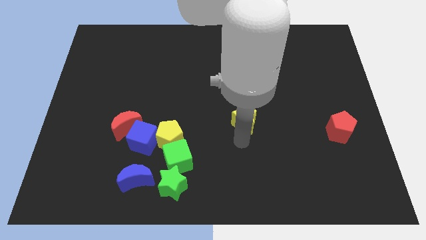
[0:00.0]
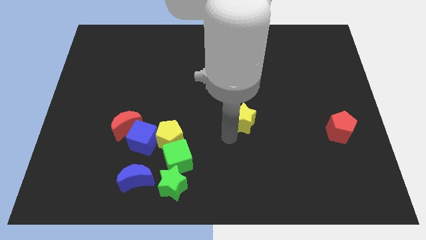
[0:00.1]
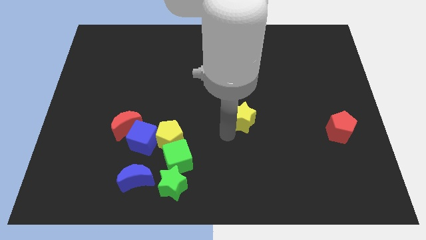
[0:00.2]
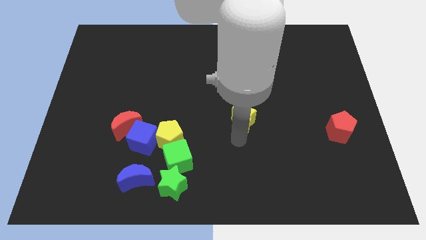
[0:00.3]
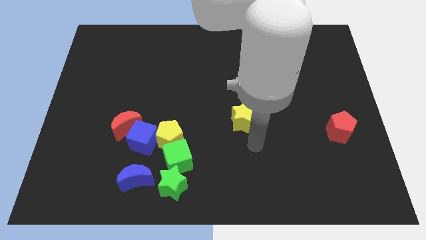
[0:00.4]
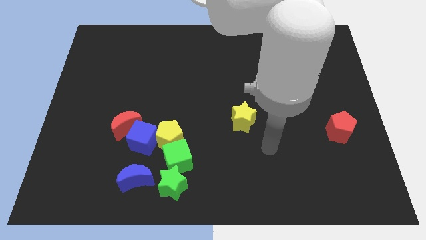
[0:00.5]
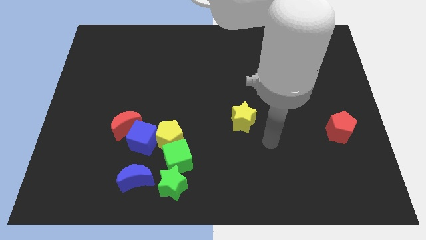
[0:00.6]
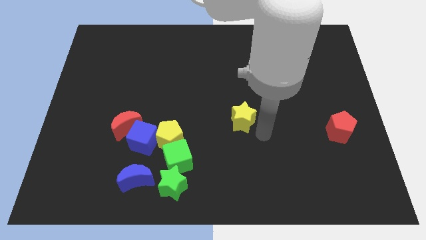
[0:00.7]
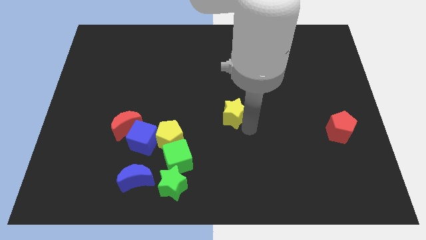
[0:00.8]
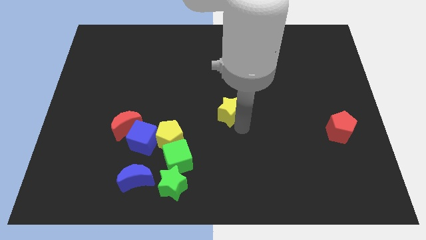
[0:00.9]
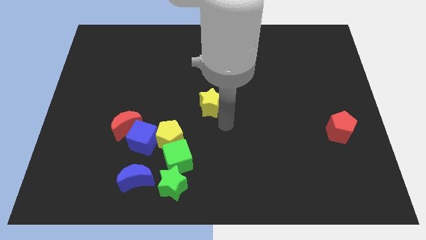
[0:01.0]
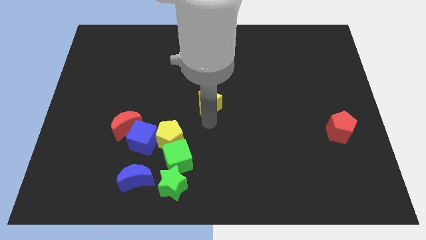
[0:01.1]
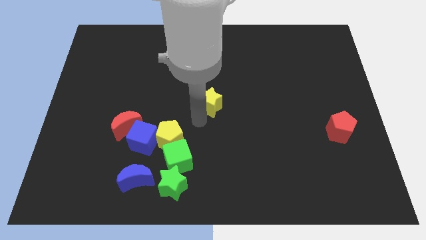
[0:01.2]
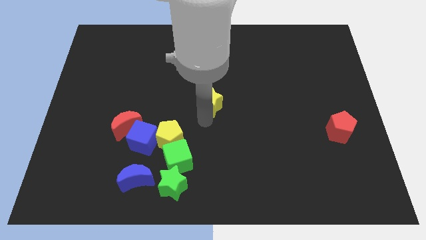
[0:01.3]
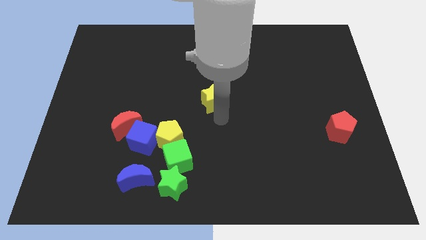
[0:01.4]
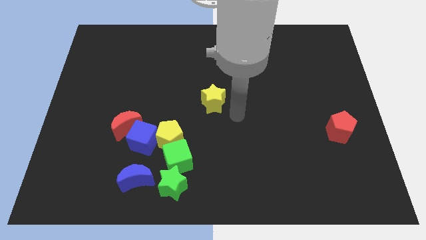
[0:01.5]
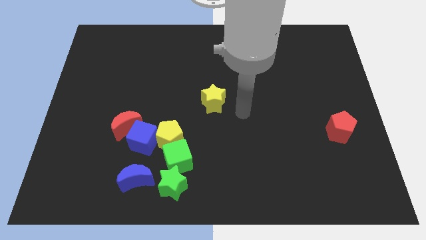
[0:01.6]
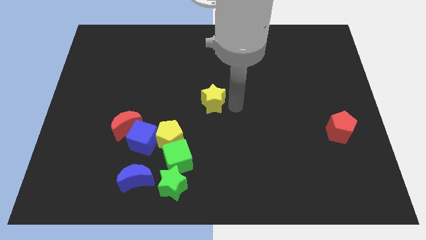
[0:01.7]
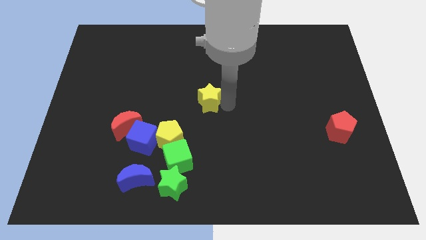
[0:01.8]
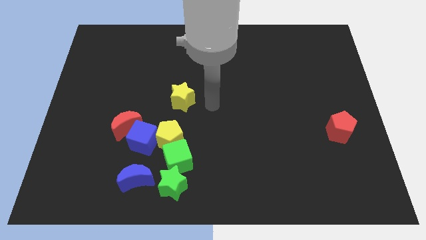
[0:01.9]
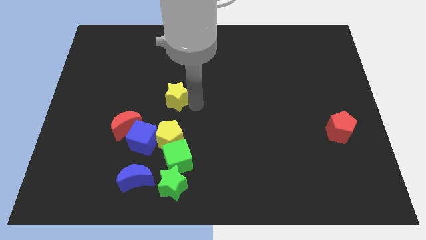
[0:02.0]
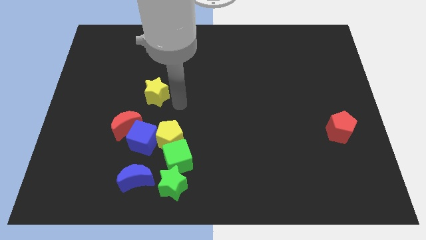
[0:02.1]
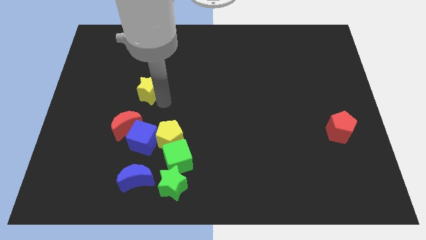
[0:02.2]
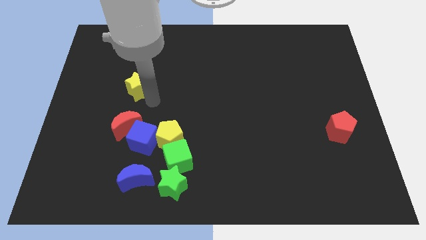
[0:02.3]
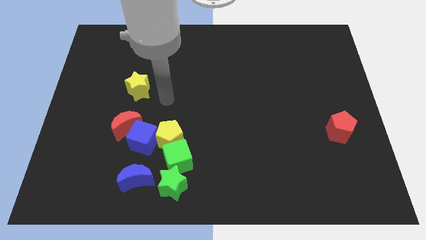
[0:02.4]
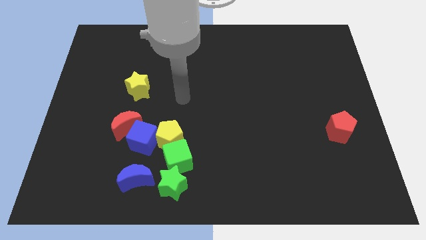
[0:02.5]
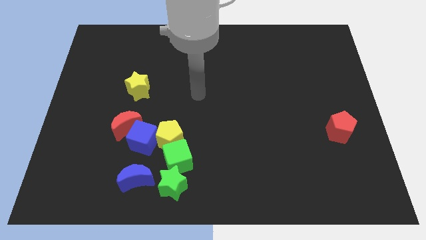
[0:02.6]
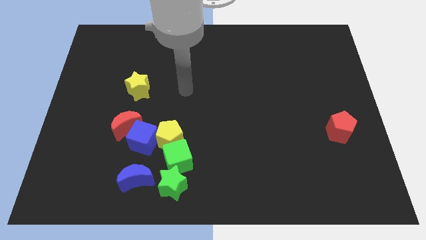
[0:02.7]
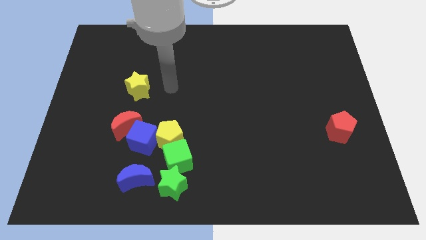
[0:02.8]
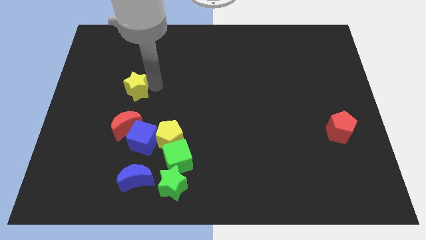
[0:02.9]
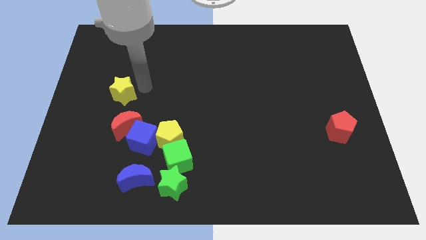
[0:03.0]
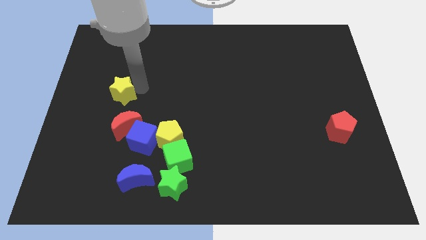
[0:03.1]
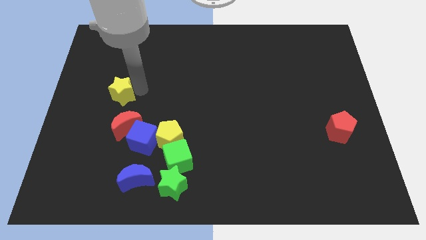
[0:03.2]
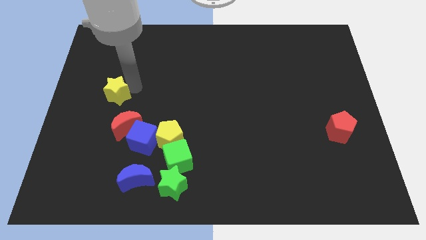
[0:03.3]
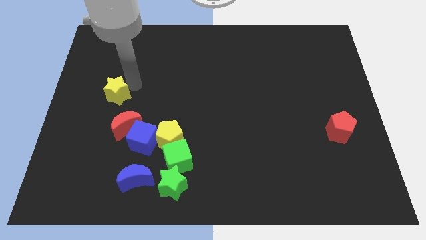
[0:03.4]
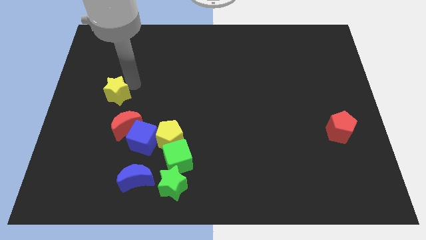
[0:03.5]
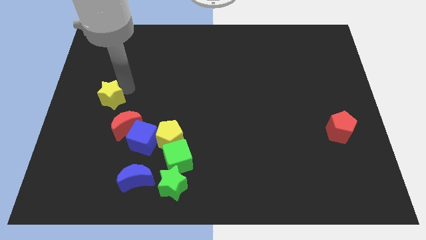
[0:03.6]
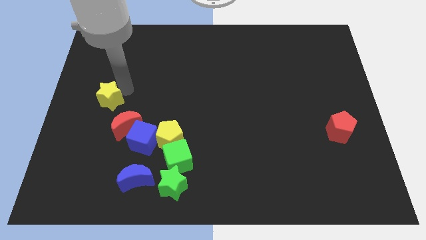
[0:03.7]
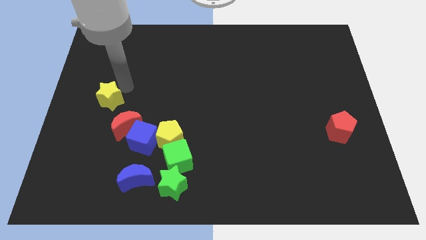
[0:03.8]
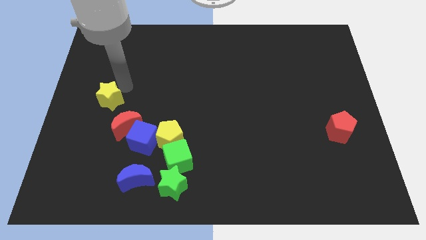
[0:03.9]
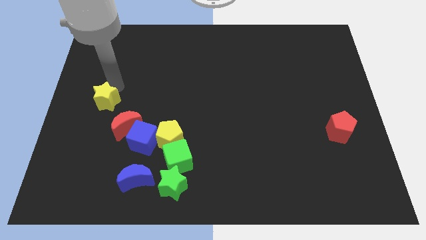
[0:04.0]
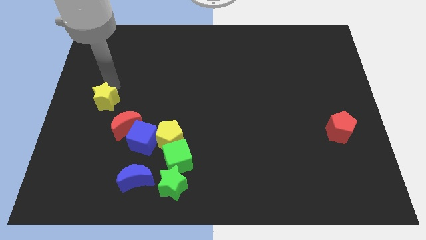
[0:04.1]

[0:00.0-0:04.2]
place the yellow star above the red moon

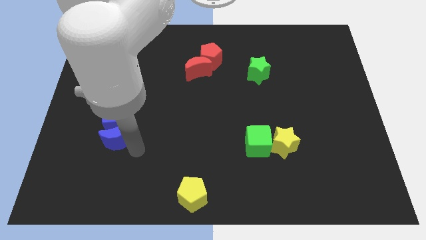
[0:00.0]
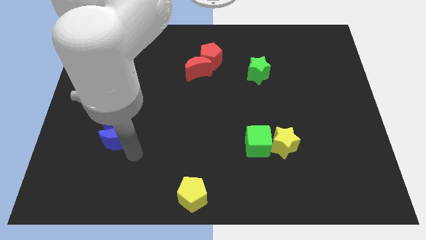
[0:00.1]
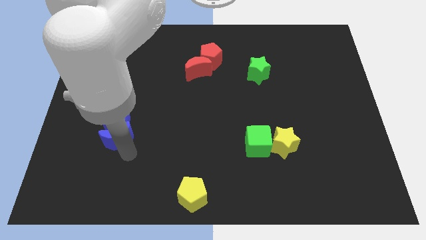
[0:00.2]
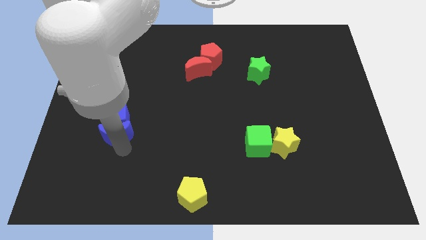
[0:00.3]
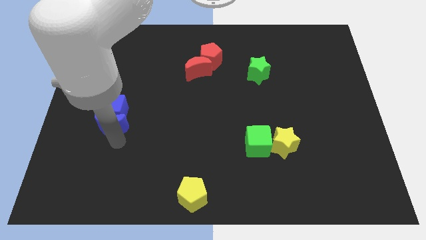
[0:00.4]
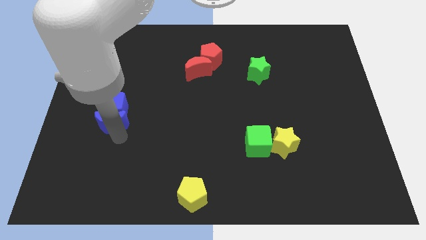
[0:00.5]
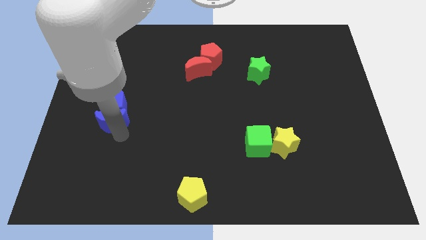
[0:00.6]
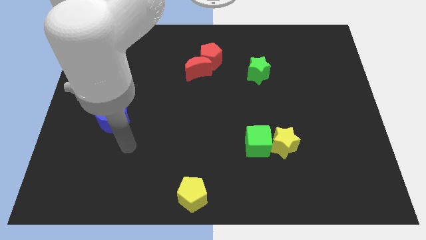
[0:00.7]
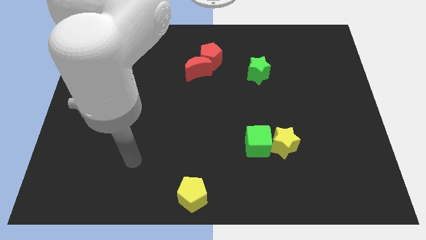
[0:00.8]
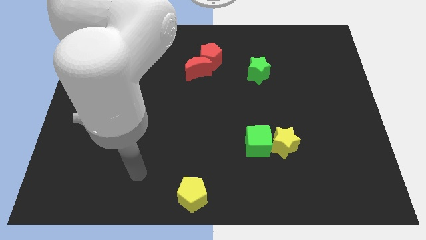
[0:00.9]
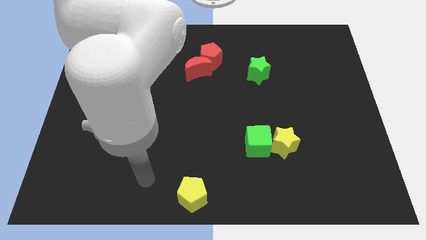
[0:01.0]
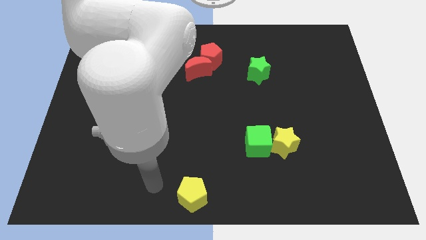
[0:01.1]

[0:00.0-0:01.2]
push both the blue blocks slightly to the top

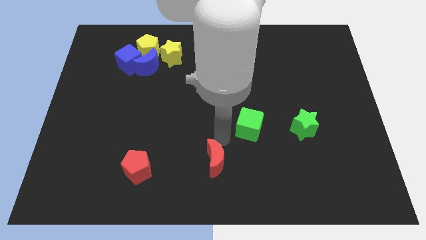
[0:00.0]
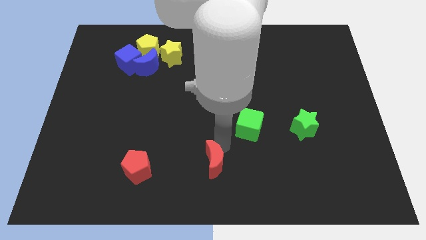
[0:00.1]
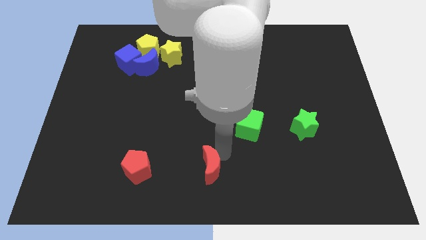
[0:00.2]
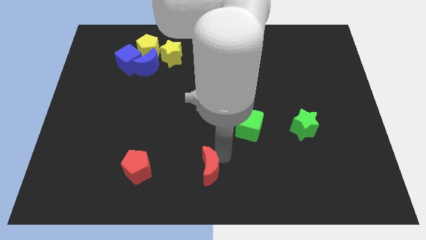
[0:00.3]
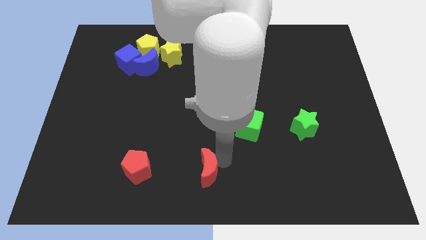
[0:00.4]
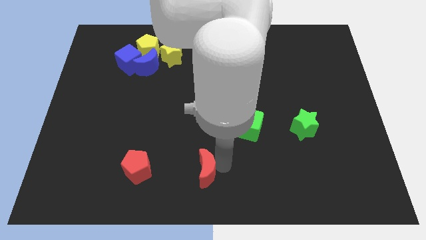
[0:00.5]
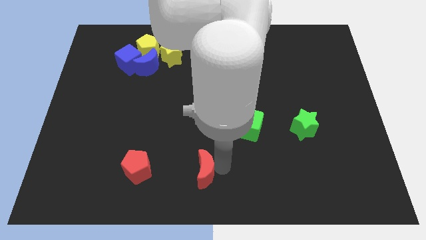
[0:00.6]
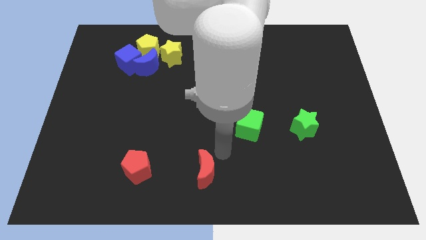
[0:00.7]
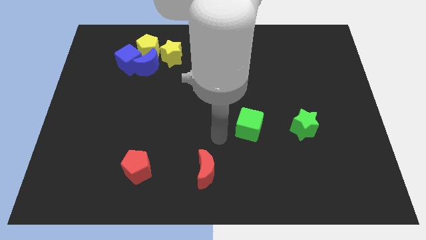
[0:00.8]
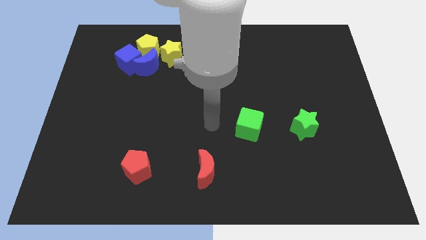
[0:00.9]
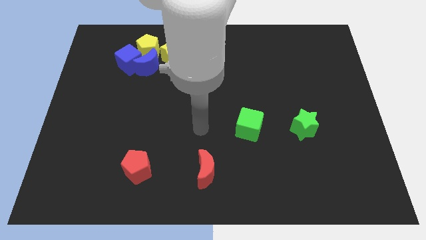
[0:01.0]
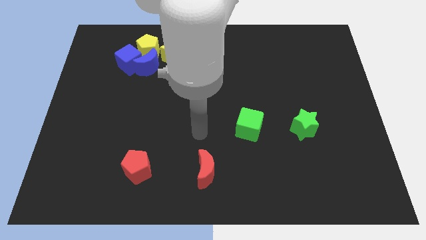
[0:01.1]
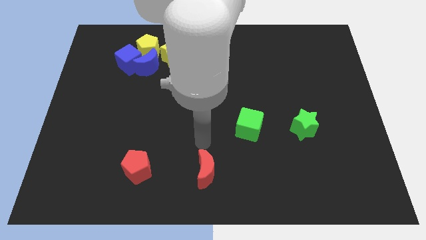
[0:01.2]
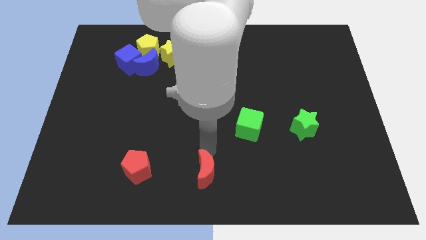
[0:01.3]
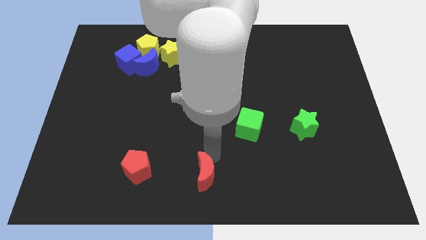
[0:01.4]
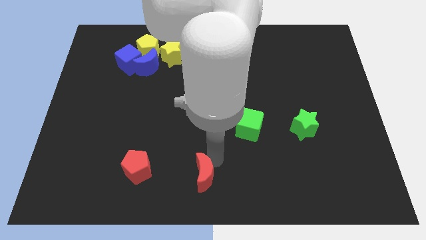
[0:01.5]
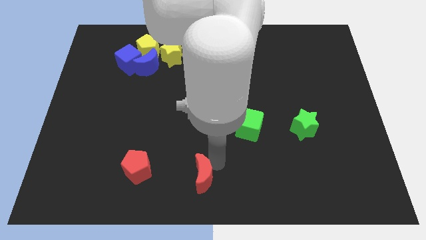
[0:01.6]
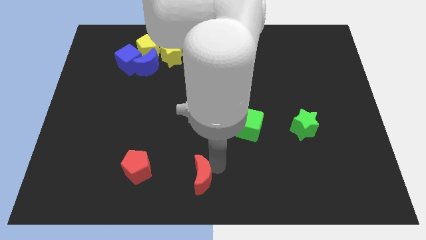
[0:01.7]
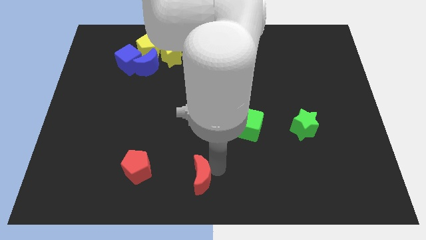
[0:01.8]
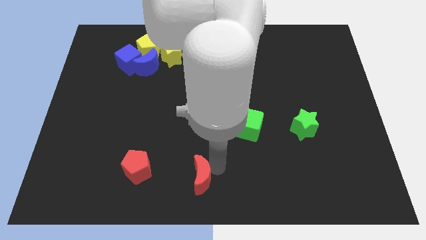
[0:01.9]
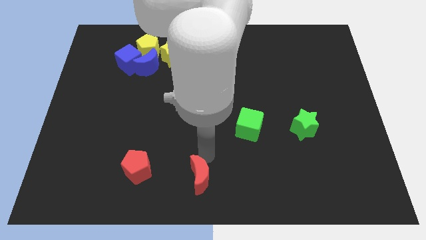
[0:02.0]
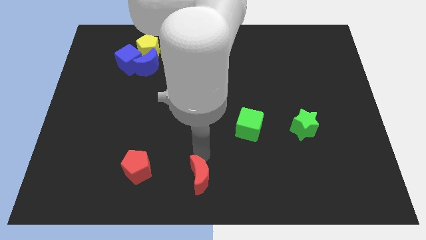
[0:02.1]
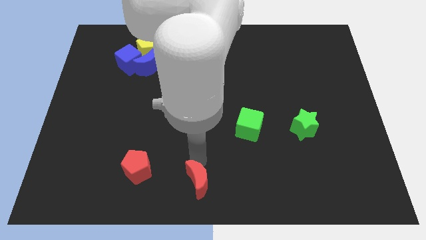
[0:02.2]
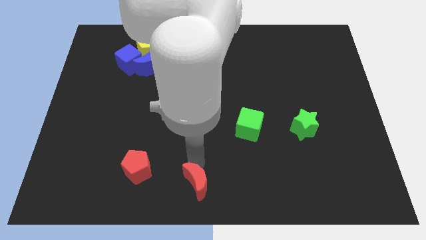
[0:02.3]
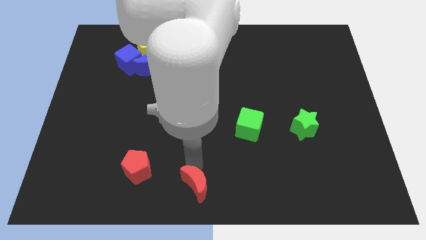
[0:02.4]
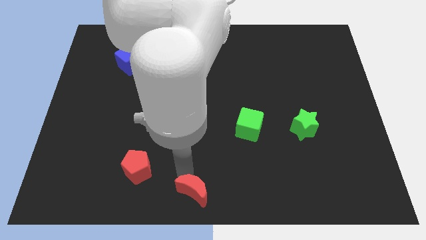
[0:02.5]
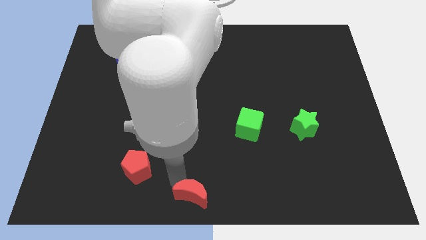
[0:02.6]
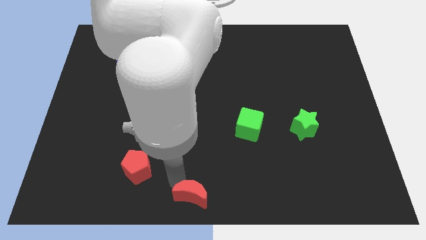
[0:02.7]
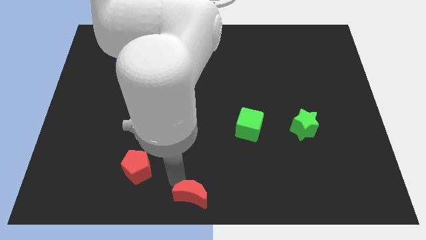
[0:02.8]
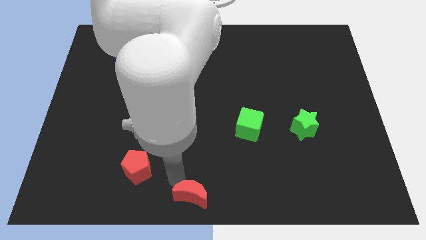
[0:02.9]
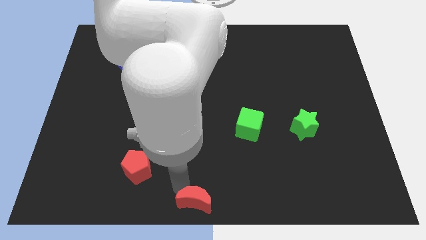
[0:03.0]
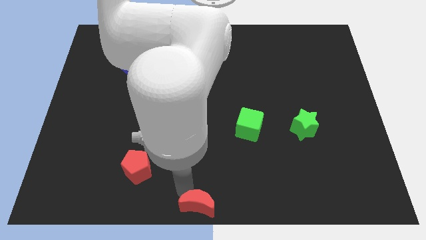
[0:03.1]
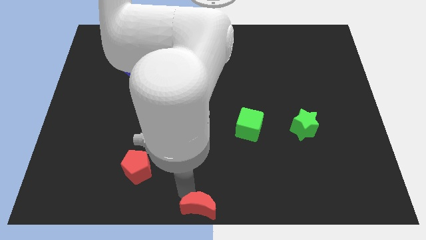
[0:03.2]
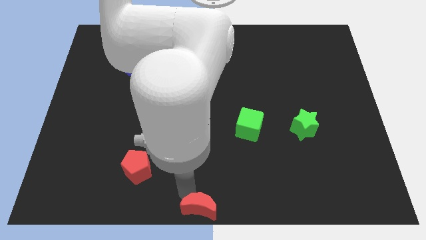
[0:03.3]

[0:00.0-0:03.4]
push the red crescent to the bottom center of the board
